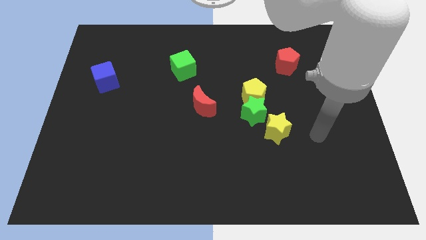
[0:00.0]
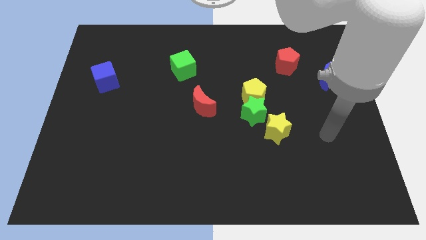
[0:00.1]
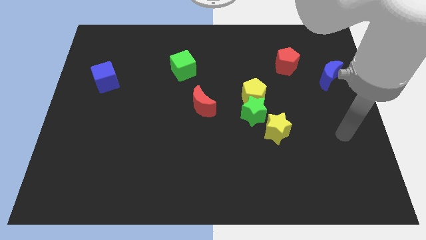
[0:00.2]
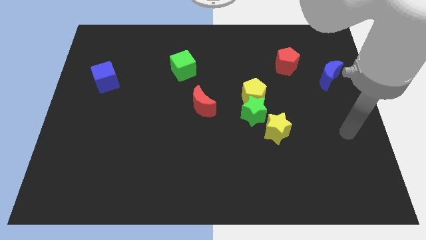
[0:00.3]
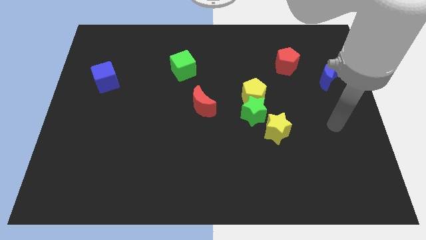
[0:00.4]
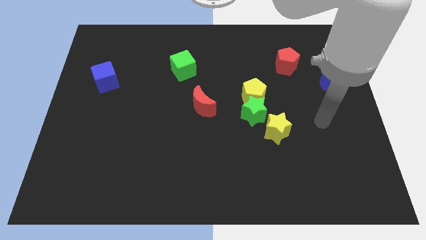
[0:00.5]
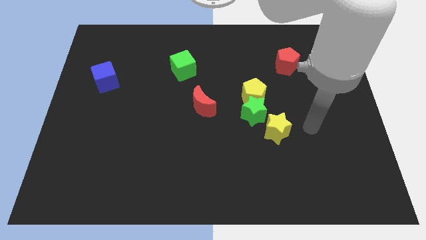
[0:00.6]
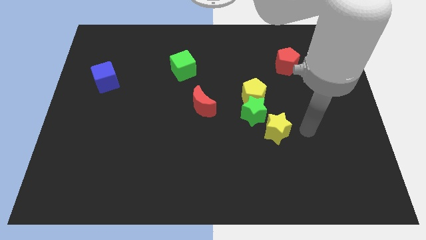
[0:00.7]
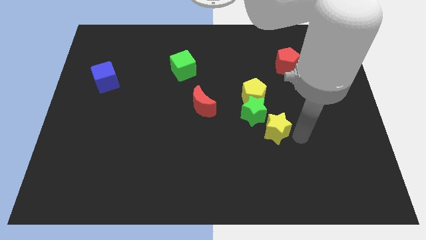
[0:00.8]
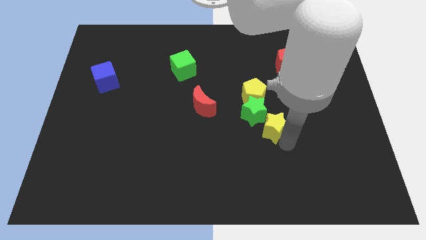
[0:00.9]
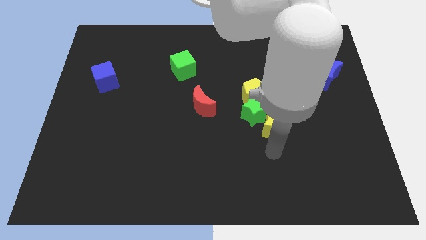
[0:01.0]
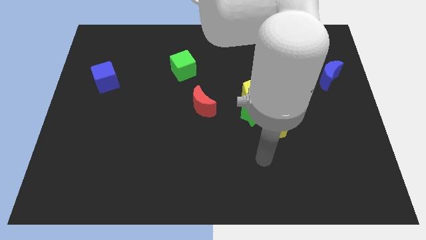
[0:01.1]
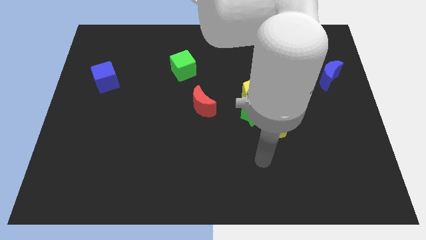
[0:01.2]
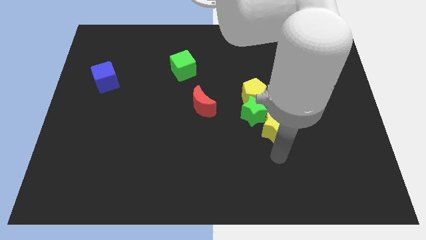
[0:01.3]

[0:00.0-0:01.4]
move slightly the yellow star into the right side of the green star

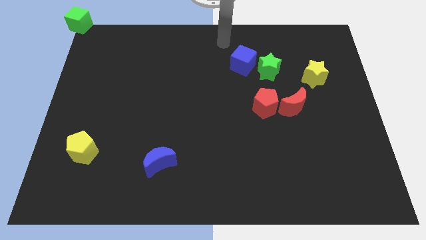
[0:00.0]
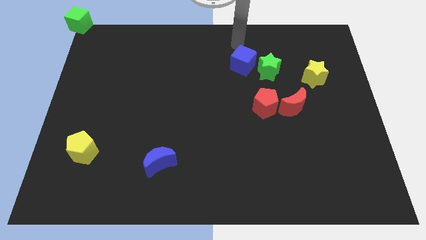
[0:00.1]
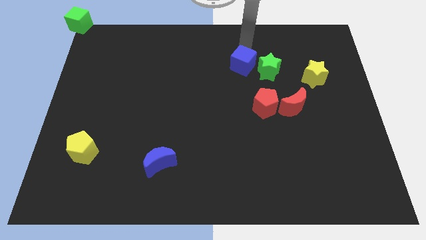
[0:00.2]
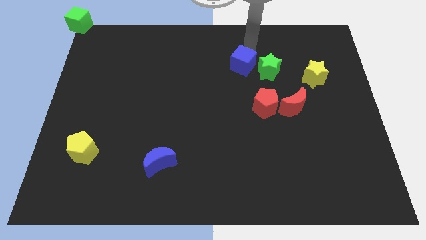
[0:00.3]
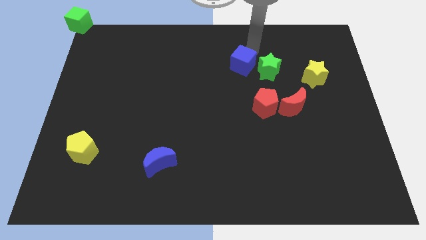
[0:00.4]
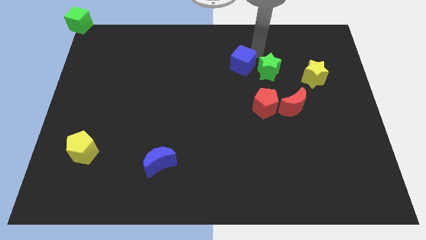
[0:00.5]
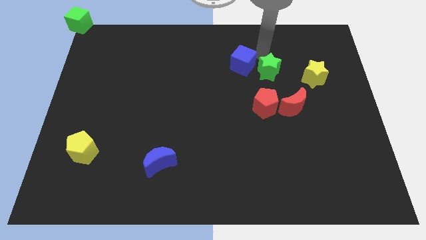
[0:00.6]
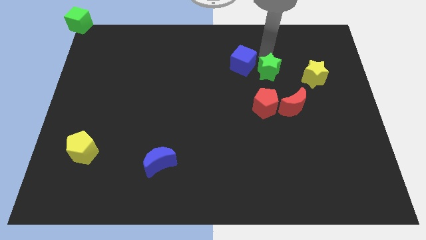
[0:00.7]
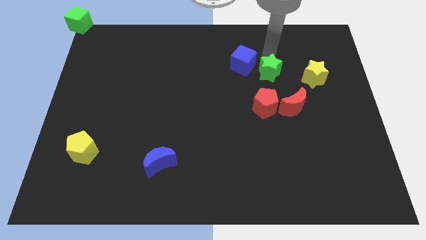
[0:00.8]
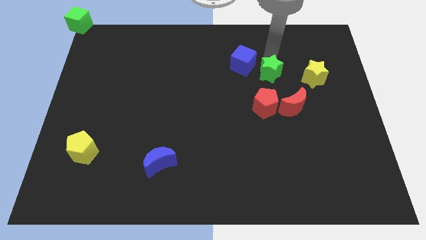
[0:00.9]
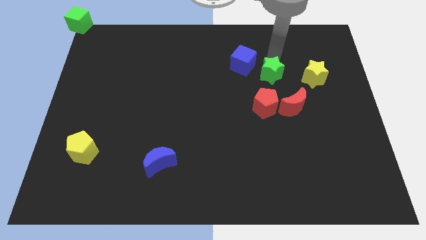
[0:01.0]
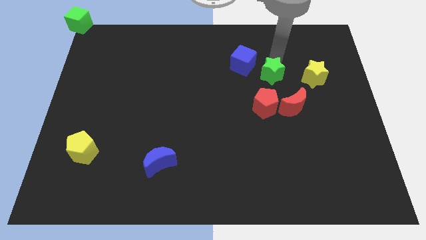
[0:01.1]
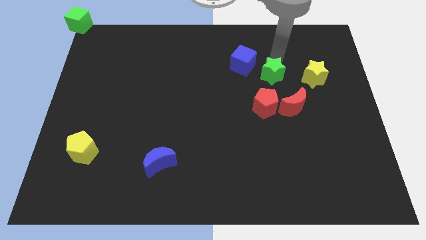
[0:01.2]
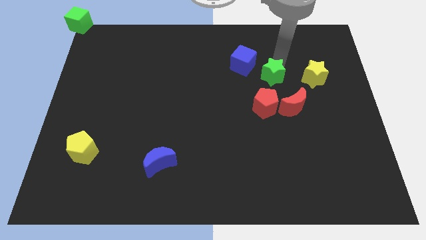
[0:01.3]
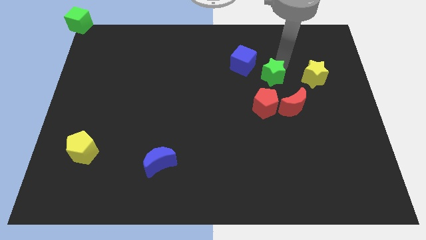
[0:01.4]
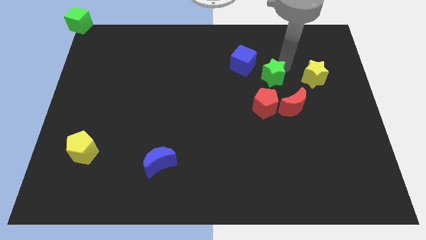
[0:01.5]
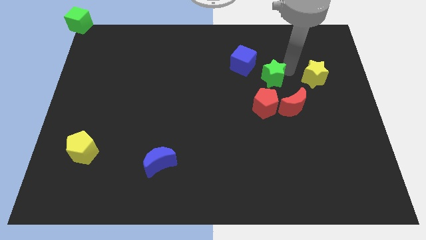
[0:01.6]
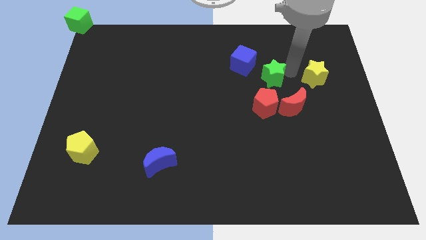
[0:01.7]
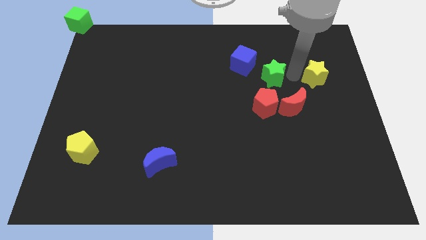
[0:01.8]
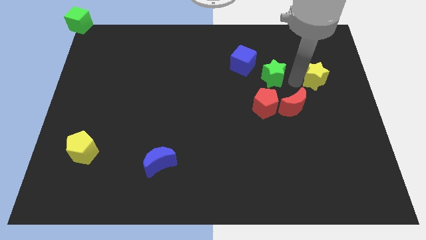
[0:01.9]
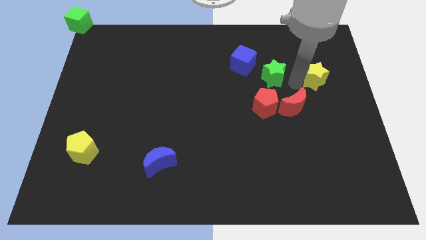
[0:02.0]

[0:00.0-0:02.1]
place your arm in between the green and yellow star

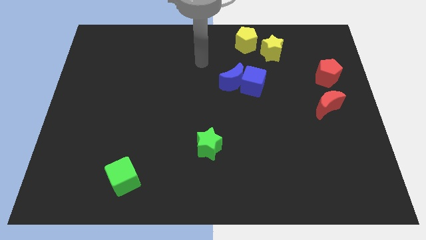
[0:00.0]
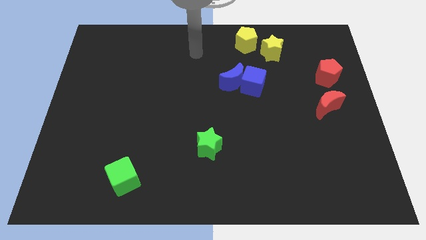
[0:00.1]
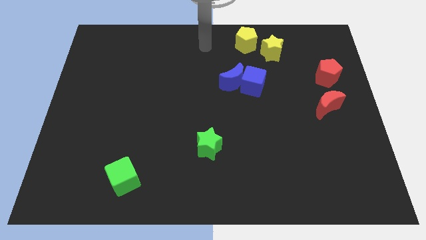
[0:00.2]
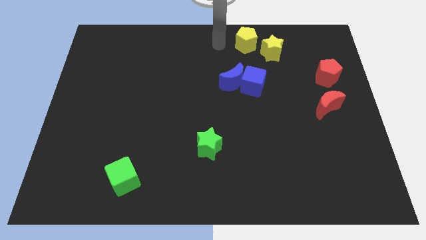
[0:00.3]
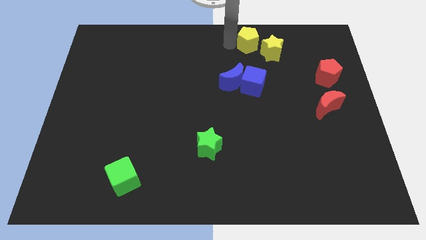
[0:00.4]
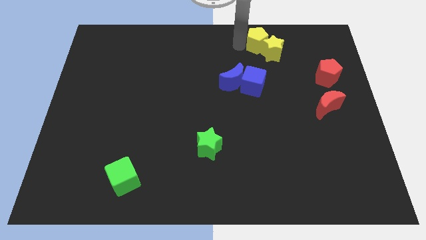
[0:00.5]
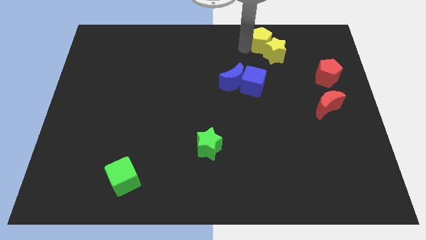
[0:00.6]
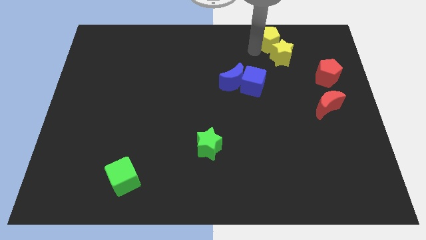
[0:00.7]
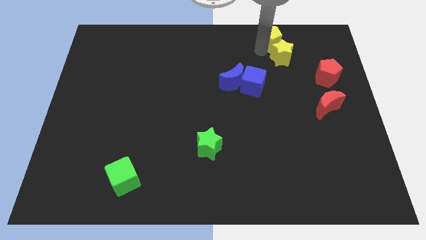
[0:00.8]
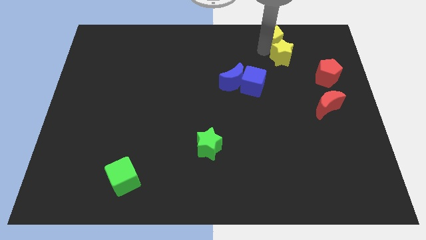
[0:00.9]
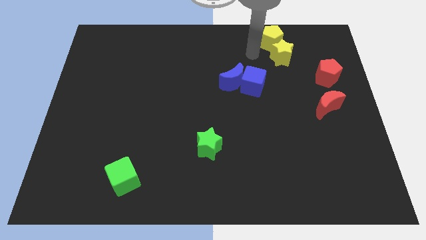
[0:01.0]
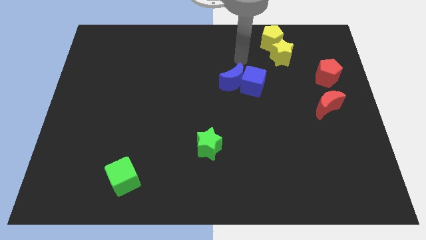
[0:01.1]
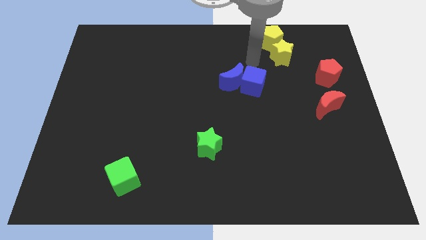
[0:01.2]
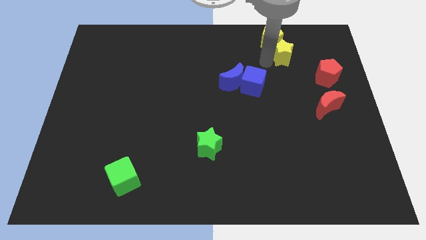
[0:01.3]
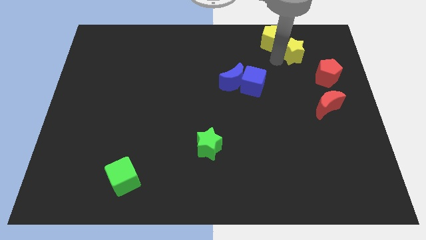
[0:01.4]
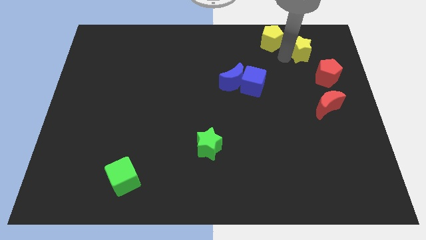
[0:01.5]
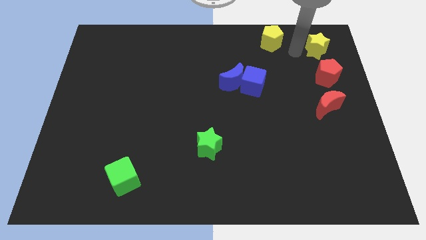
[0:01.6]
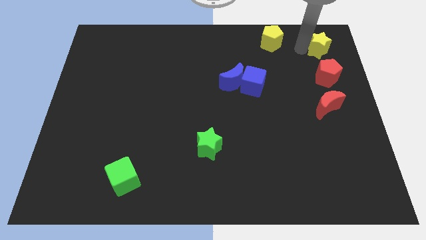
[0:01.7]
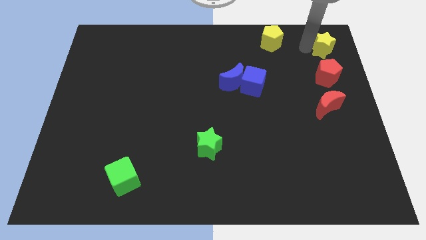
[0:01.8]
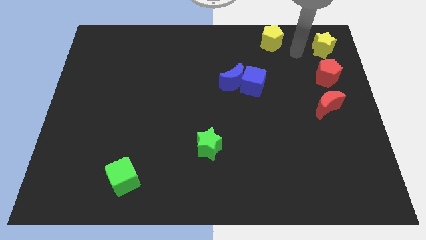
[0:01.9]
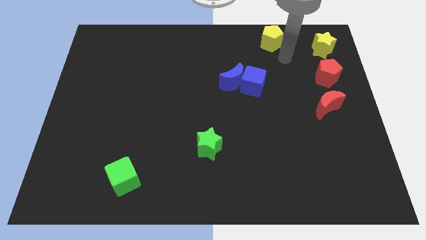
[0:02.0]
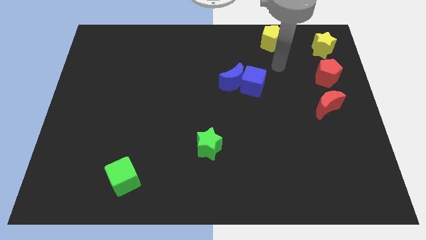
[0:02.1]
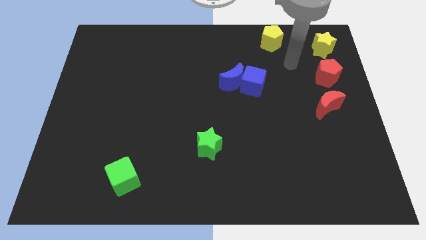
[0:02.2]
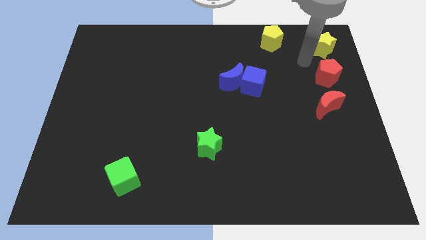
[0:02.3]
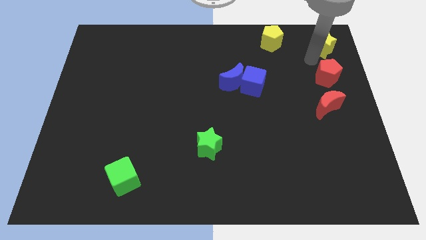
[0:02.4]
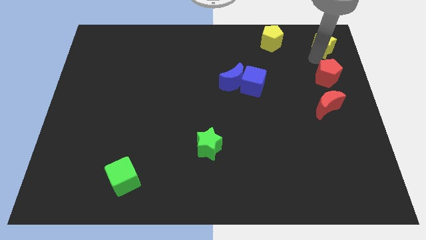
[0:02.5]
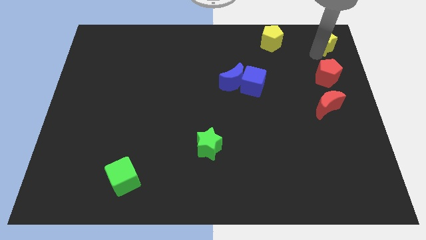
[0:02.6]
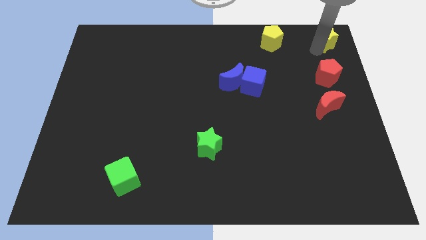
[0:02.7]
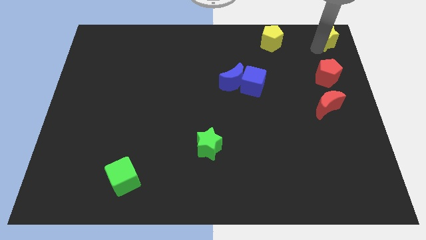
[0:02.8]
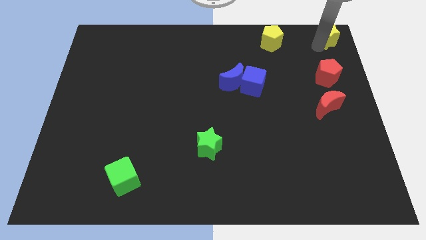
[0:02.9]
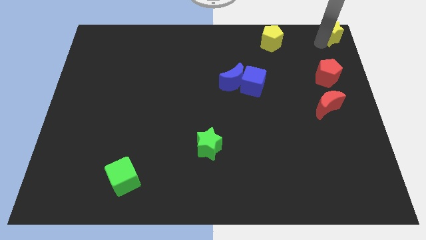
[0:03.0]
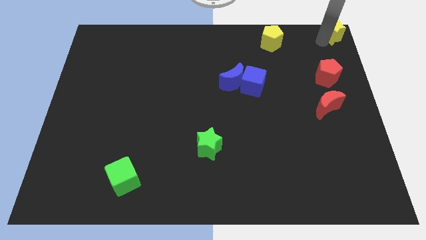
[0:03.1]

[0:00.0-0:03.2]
push the yellow pentagon and yellow star towards the right side of the board

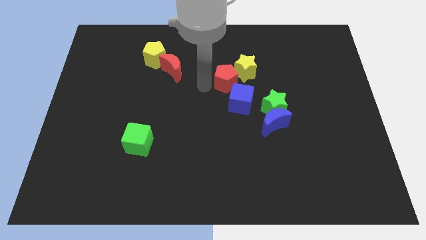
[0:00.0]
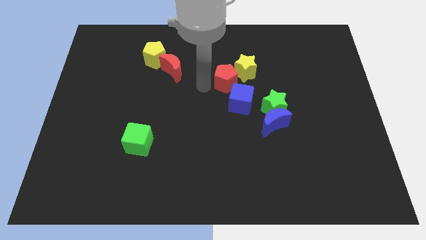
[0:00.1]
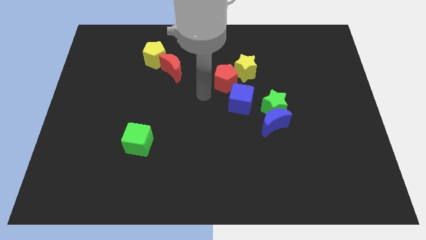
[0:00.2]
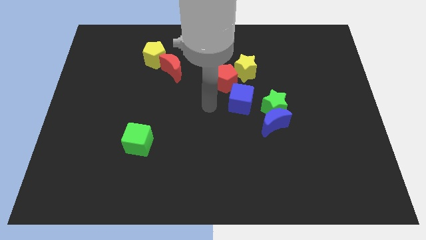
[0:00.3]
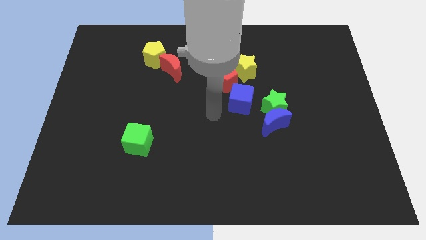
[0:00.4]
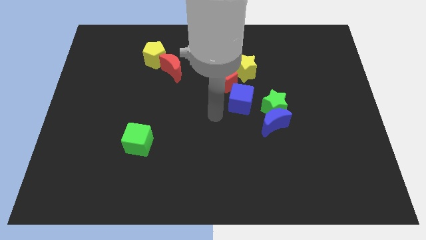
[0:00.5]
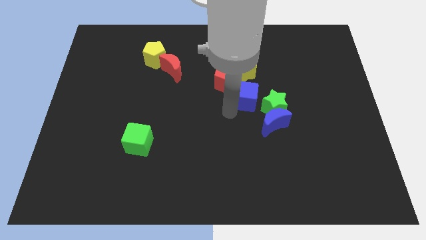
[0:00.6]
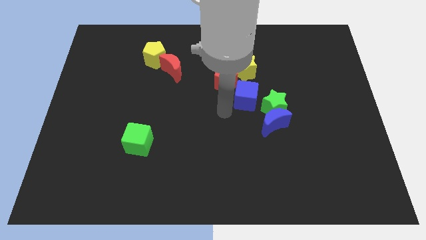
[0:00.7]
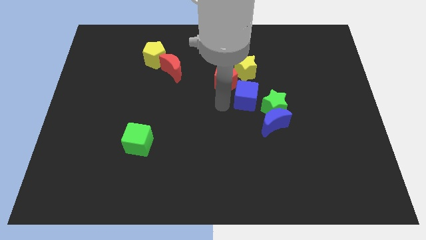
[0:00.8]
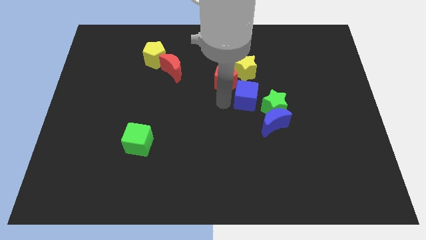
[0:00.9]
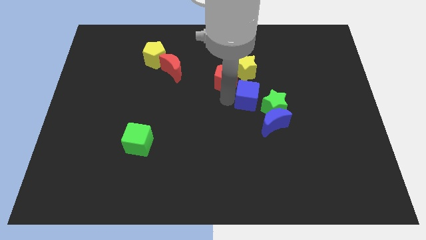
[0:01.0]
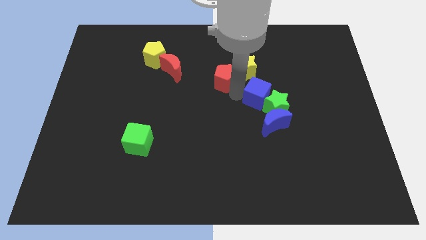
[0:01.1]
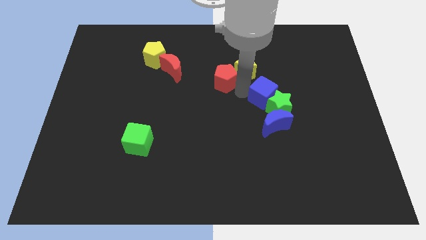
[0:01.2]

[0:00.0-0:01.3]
move the blue cube to the left of the green star

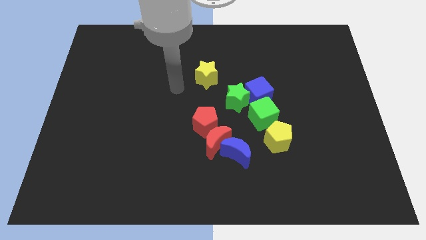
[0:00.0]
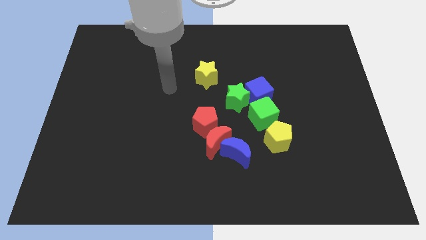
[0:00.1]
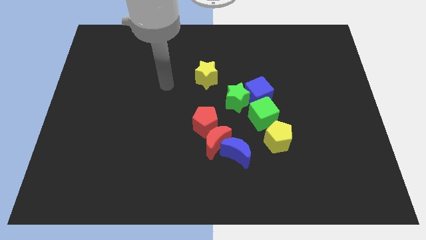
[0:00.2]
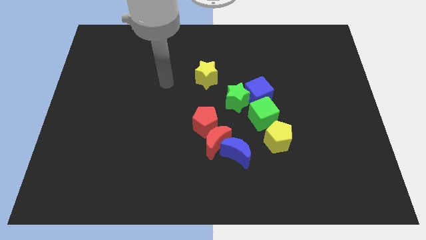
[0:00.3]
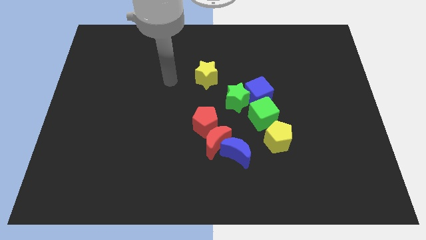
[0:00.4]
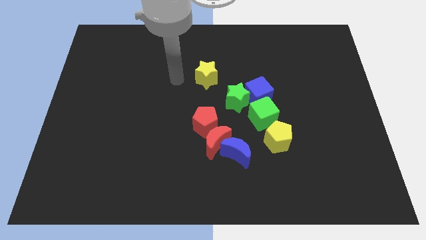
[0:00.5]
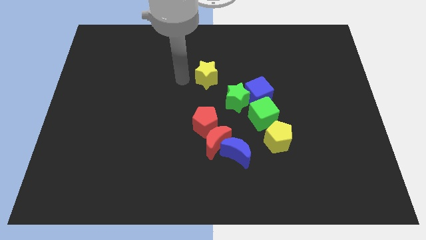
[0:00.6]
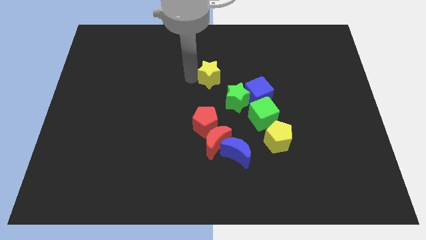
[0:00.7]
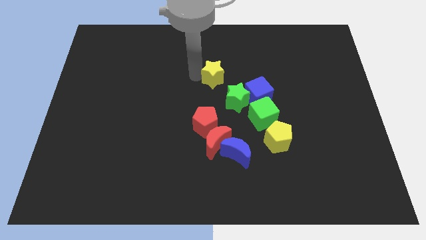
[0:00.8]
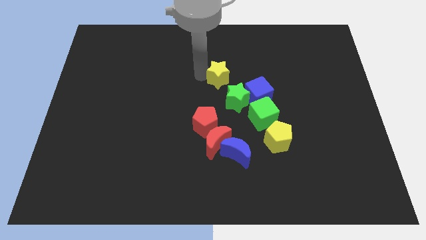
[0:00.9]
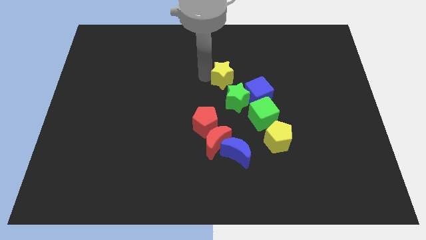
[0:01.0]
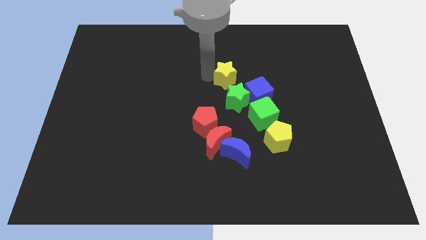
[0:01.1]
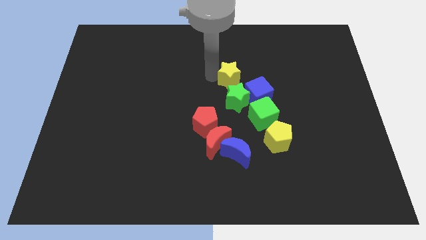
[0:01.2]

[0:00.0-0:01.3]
place the yellow star on top of green star
